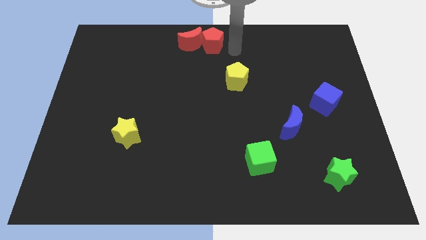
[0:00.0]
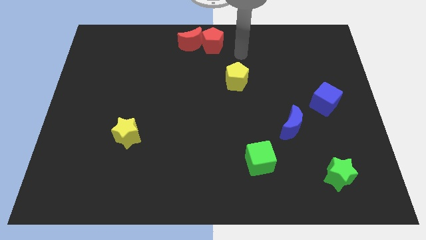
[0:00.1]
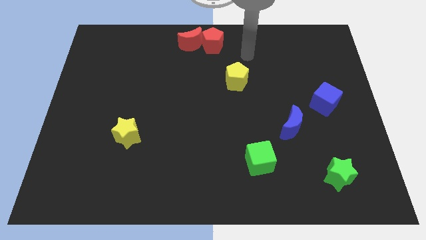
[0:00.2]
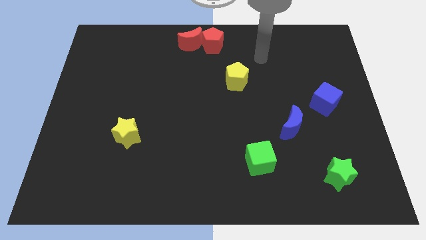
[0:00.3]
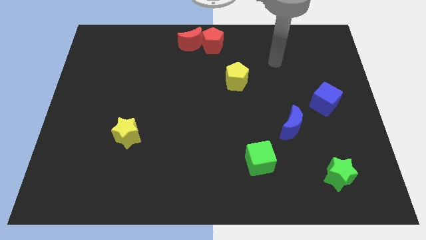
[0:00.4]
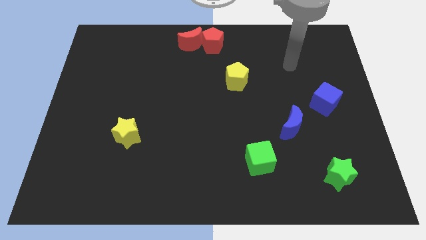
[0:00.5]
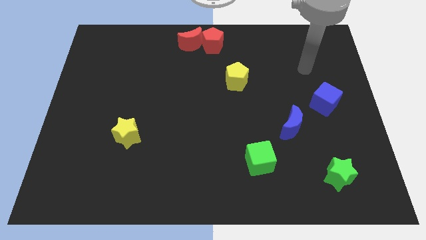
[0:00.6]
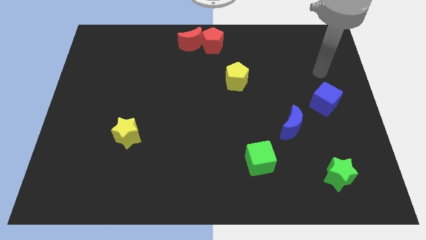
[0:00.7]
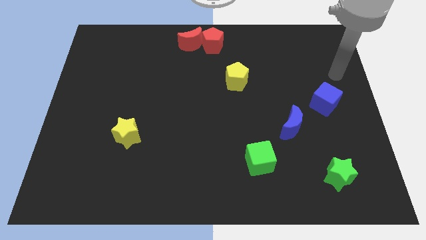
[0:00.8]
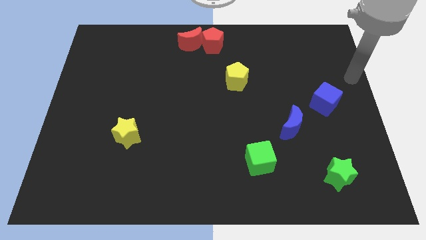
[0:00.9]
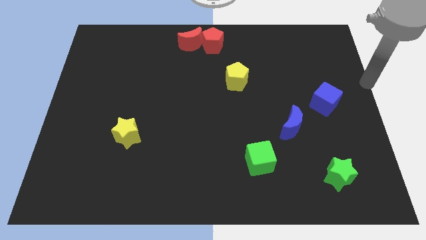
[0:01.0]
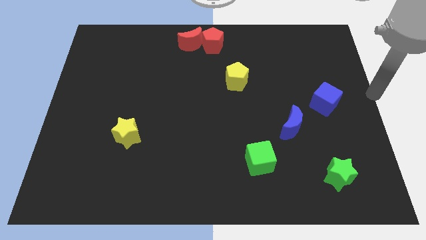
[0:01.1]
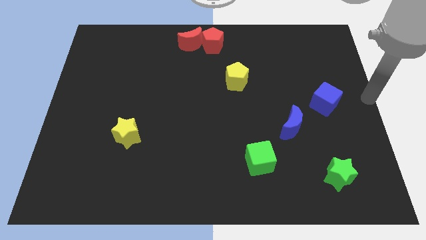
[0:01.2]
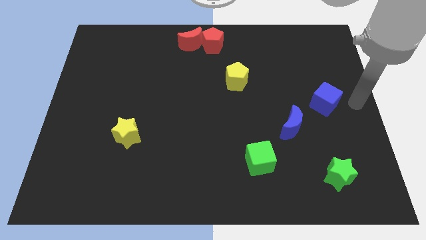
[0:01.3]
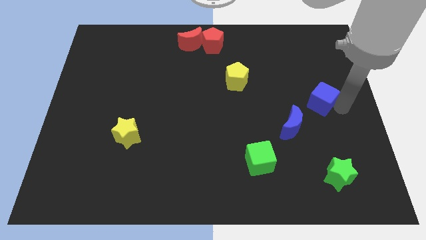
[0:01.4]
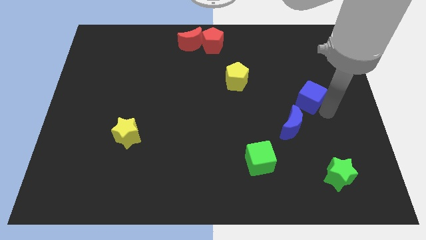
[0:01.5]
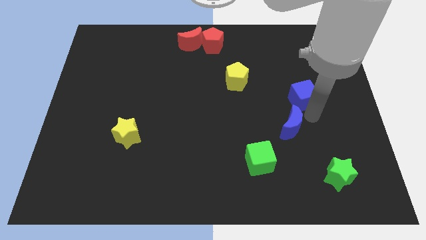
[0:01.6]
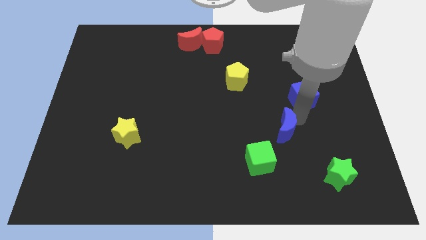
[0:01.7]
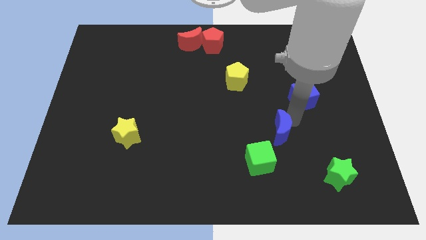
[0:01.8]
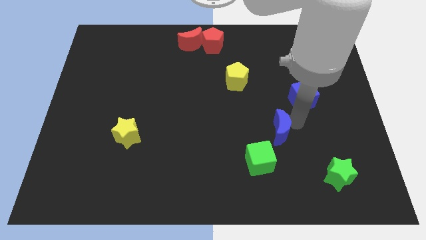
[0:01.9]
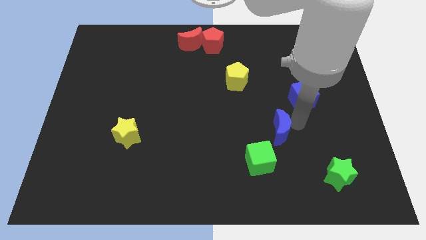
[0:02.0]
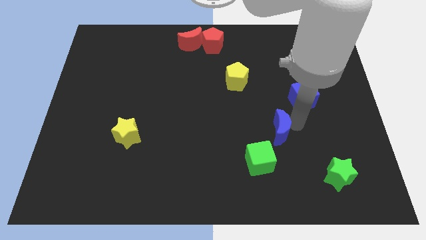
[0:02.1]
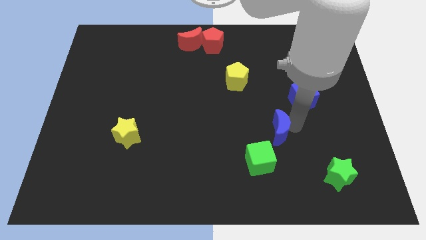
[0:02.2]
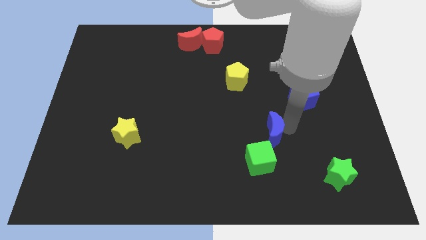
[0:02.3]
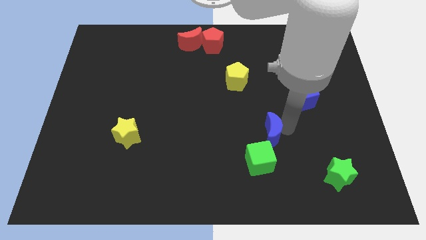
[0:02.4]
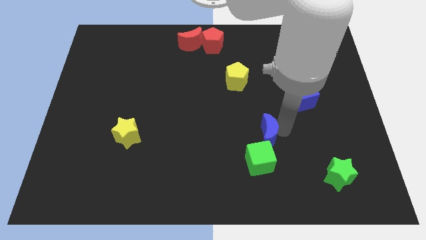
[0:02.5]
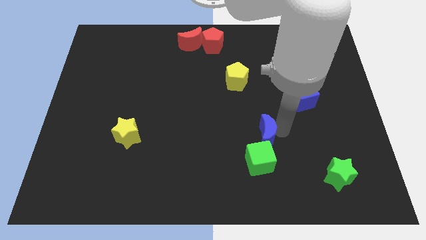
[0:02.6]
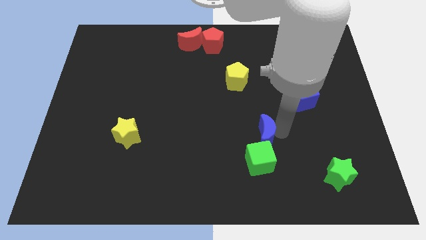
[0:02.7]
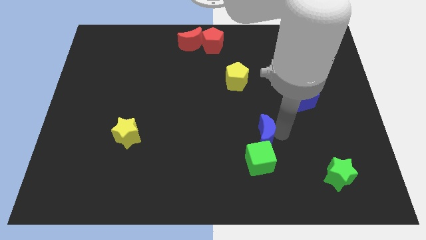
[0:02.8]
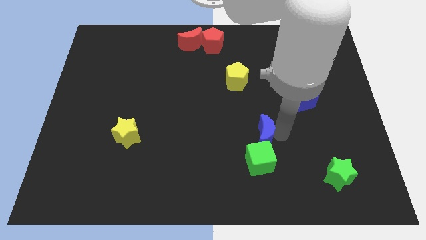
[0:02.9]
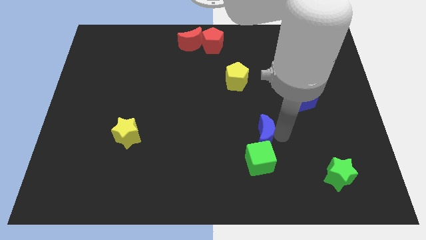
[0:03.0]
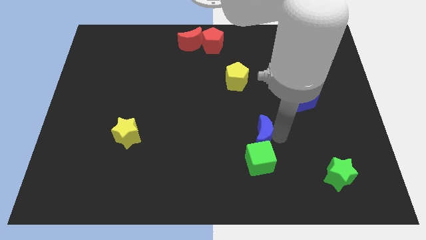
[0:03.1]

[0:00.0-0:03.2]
place the blue moon to the top side of the green cube

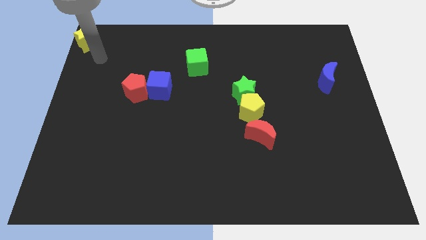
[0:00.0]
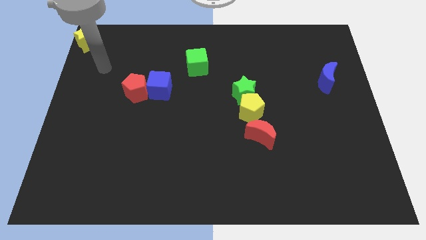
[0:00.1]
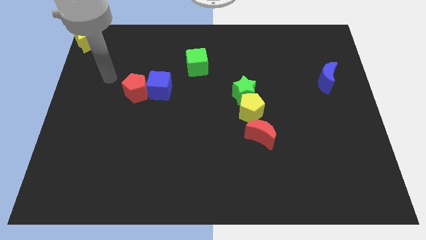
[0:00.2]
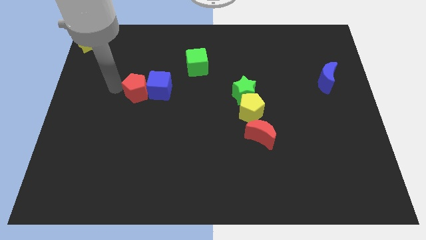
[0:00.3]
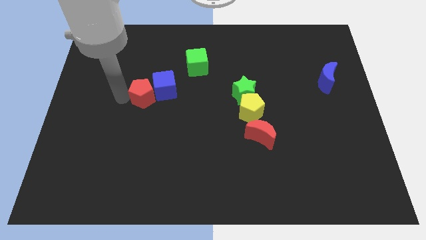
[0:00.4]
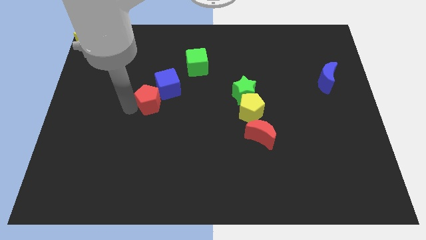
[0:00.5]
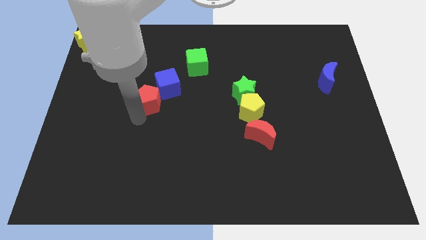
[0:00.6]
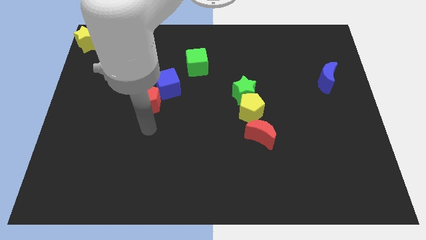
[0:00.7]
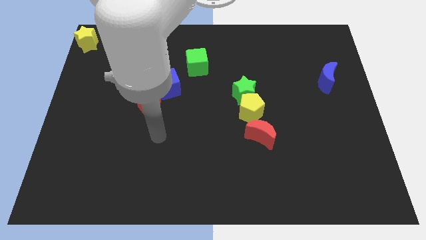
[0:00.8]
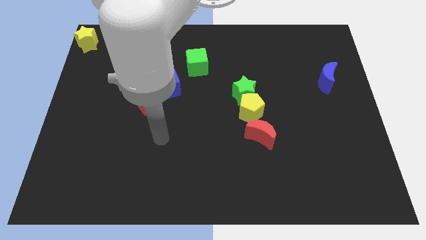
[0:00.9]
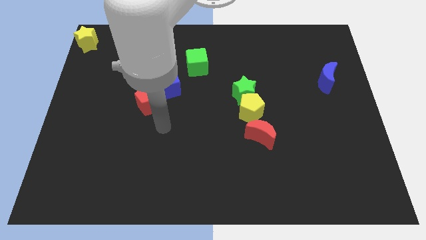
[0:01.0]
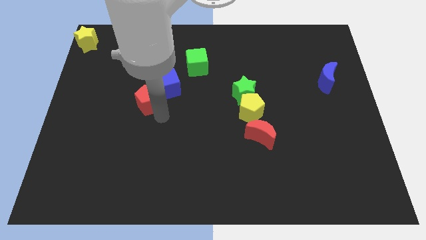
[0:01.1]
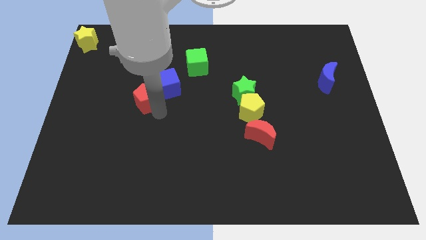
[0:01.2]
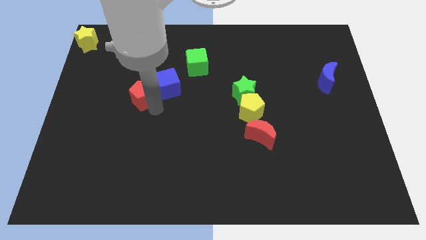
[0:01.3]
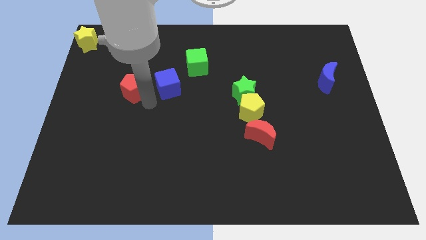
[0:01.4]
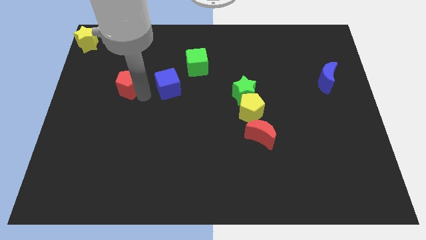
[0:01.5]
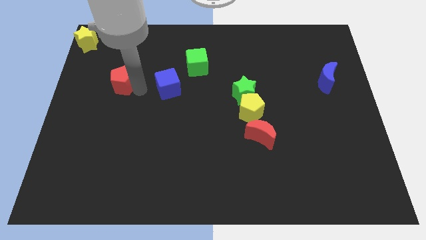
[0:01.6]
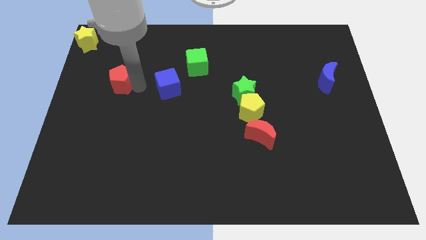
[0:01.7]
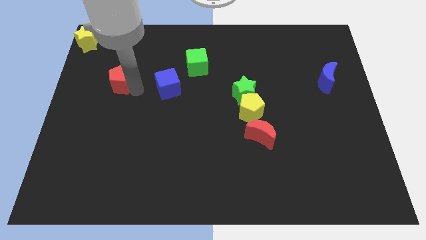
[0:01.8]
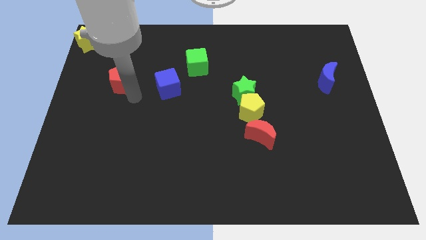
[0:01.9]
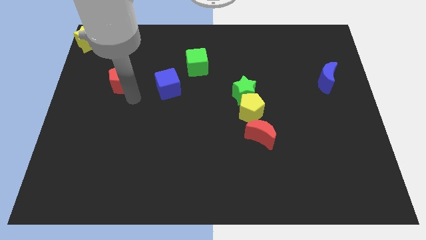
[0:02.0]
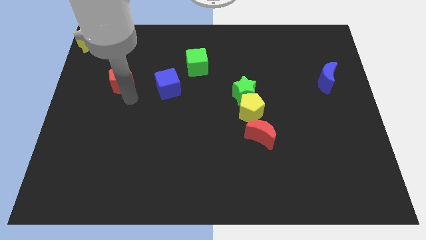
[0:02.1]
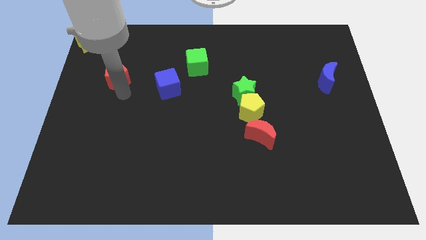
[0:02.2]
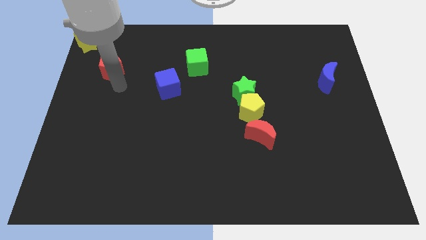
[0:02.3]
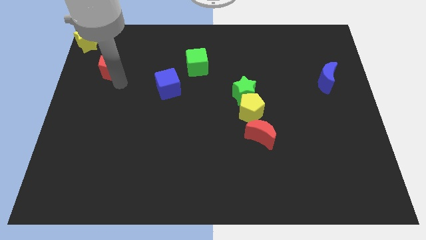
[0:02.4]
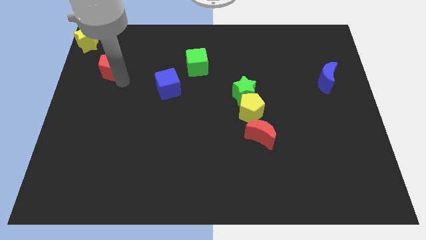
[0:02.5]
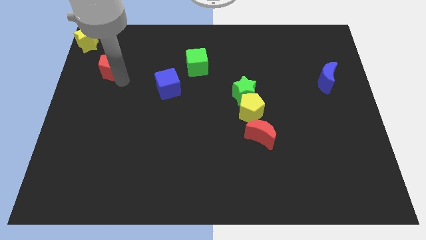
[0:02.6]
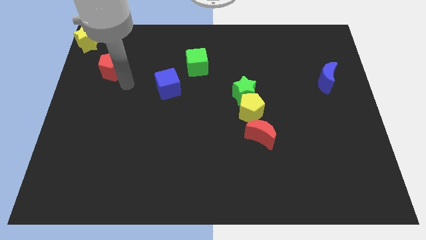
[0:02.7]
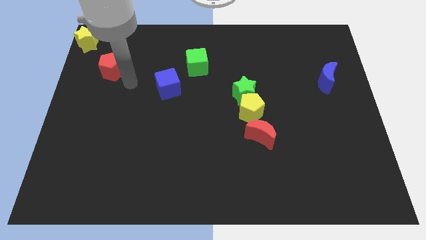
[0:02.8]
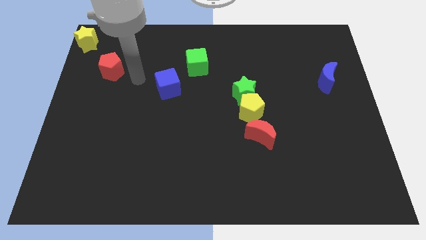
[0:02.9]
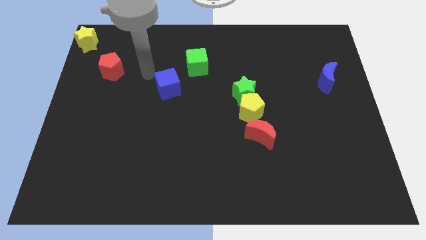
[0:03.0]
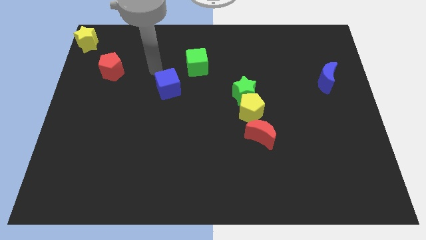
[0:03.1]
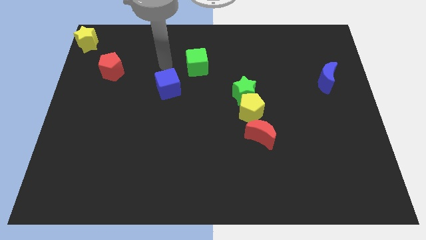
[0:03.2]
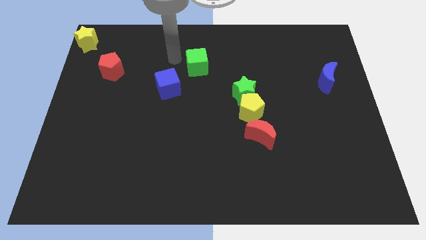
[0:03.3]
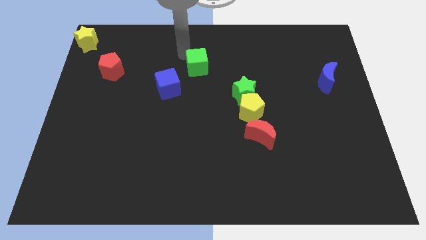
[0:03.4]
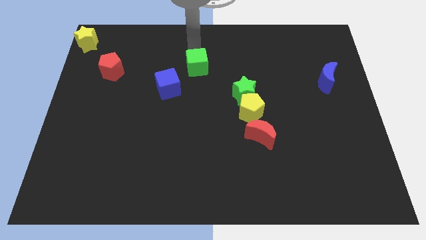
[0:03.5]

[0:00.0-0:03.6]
move red pentagon to the bottom right of yellow star

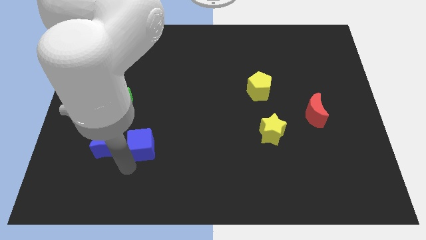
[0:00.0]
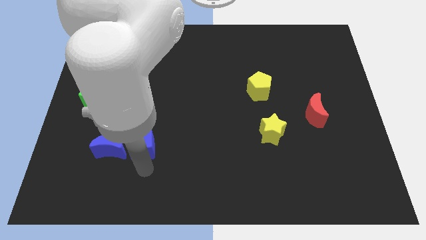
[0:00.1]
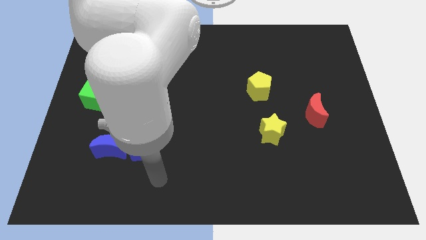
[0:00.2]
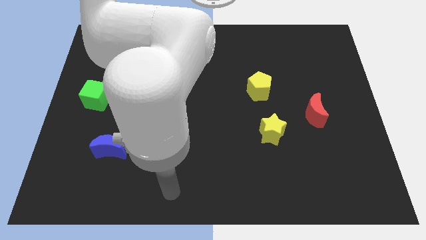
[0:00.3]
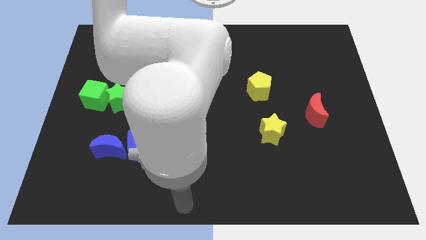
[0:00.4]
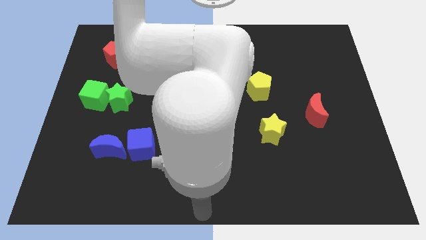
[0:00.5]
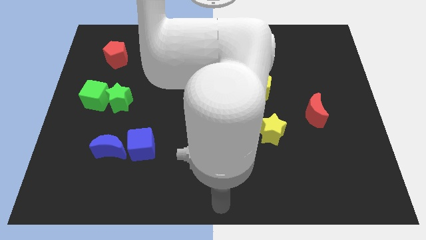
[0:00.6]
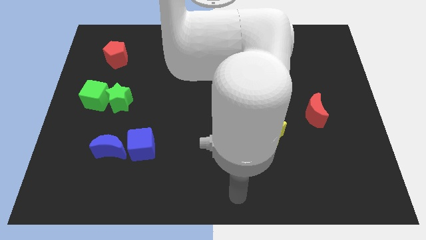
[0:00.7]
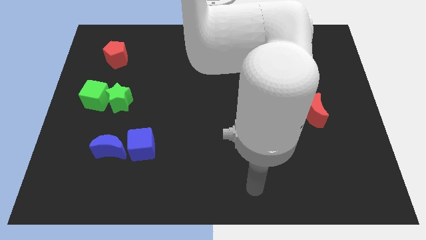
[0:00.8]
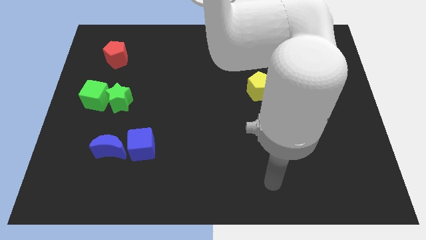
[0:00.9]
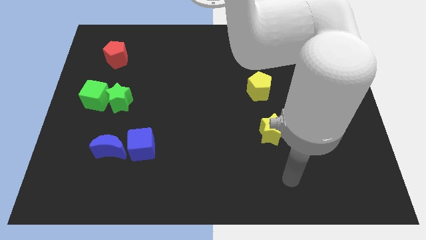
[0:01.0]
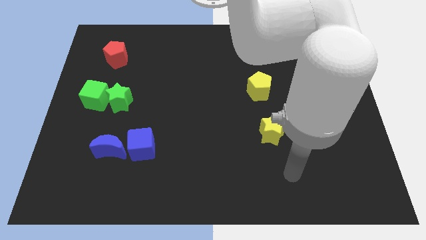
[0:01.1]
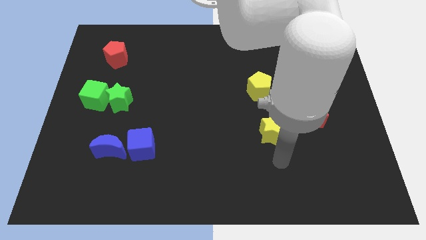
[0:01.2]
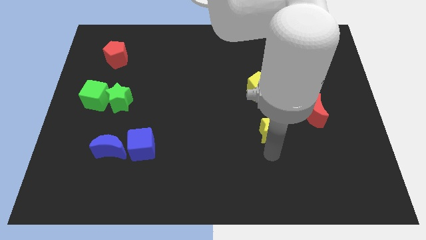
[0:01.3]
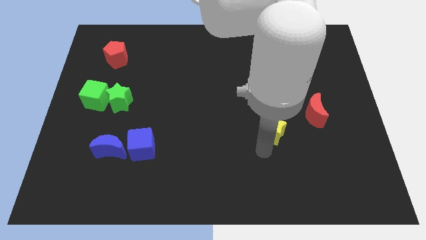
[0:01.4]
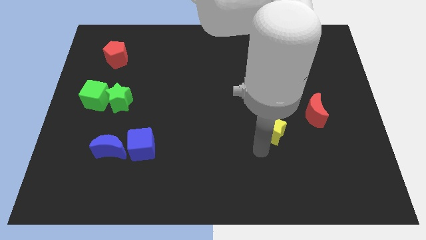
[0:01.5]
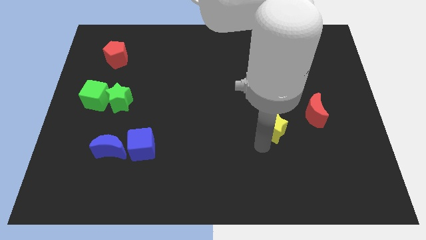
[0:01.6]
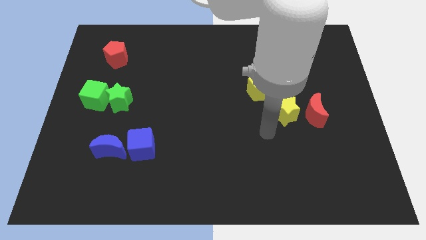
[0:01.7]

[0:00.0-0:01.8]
move the arm away from the blue blocks

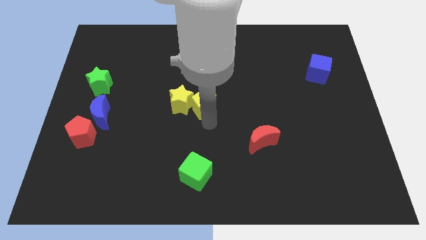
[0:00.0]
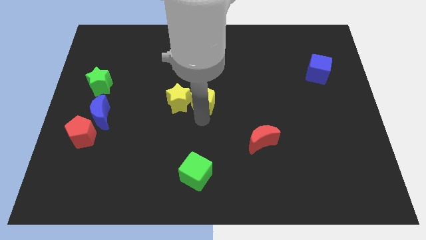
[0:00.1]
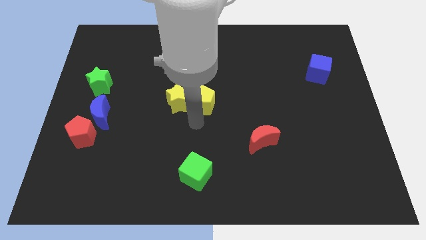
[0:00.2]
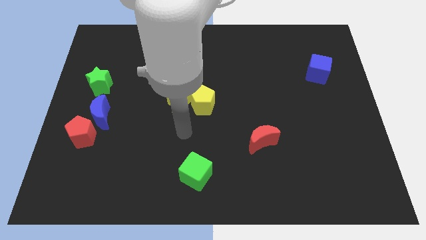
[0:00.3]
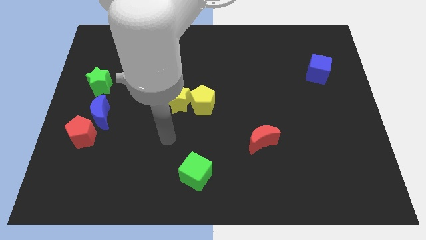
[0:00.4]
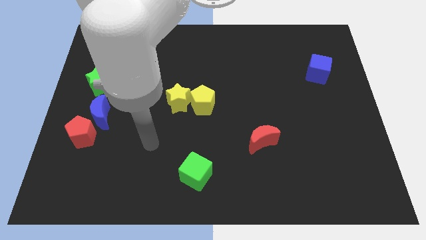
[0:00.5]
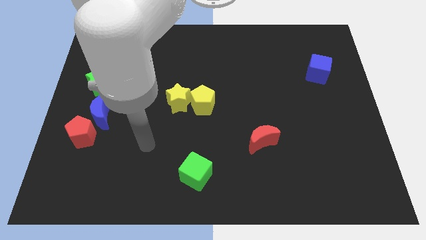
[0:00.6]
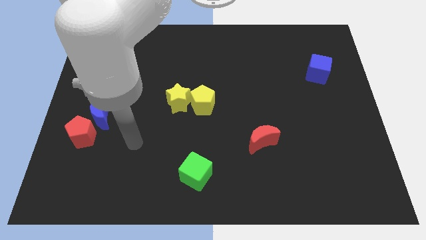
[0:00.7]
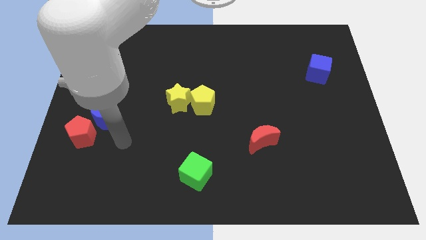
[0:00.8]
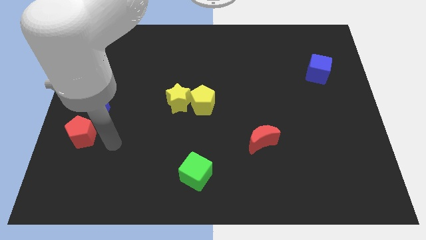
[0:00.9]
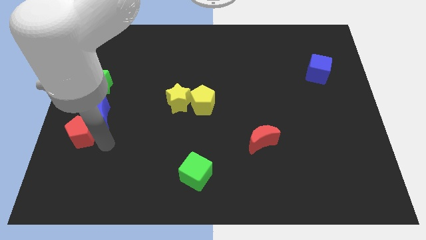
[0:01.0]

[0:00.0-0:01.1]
move your arm on the right side of the red pentagon
